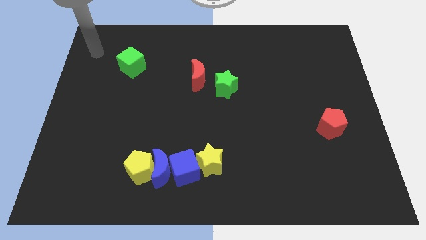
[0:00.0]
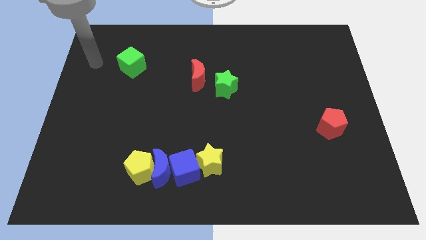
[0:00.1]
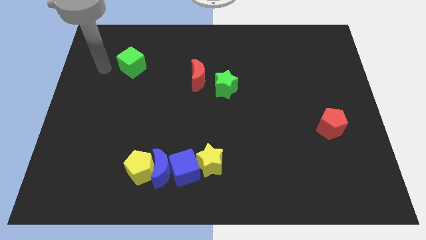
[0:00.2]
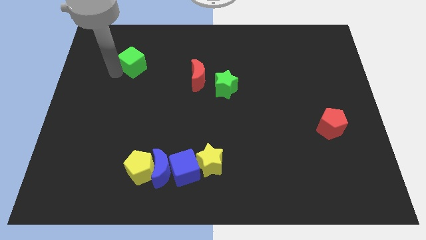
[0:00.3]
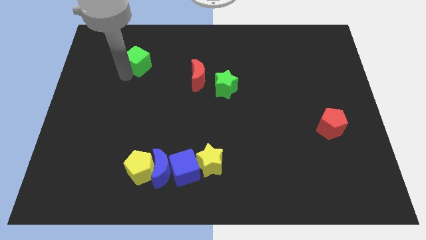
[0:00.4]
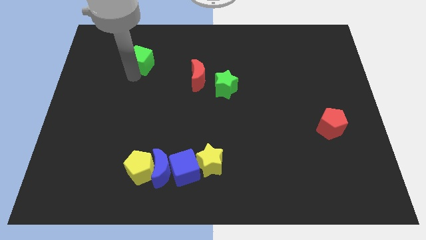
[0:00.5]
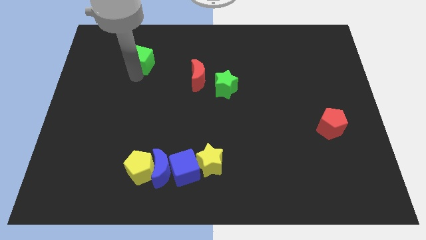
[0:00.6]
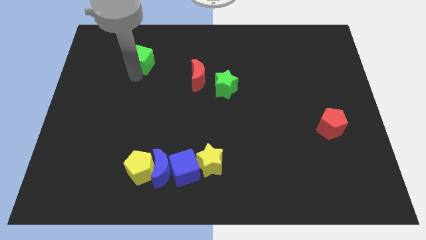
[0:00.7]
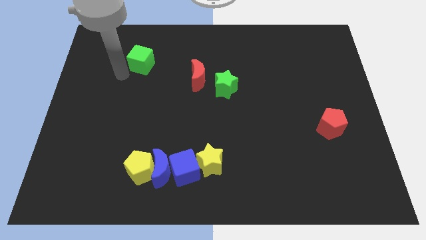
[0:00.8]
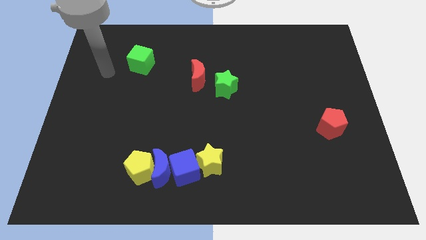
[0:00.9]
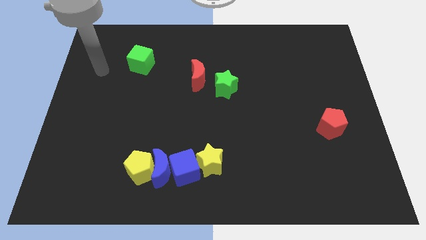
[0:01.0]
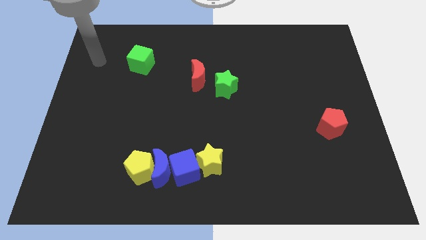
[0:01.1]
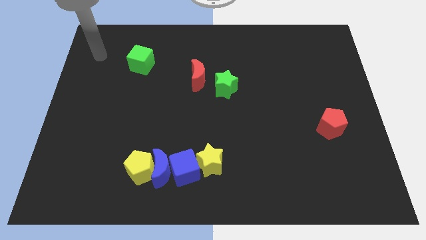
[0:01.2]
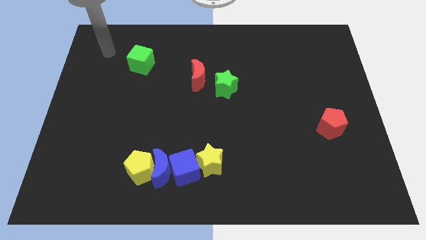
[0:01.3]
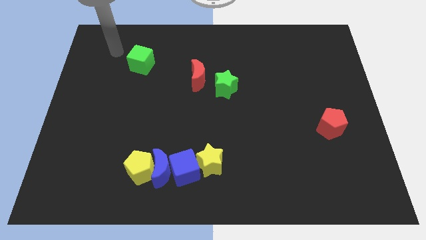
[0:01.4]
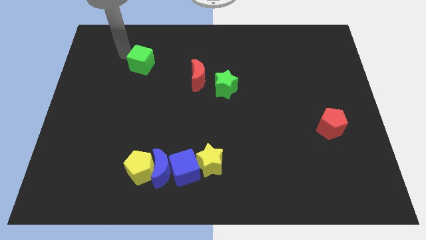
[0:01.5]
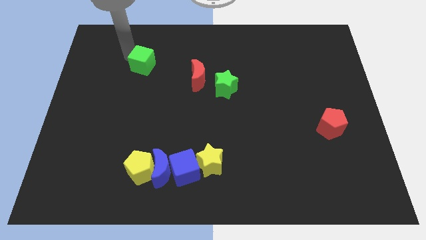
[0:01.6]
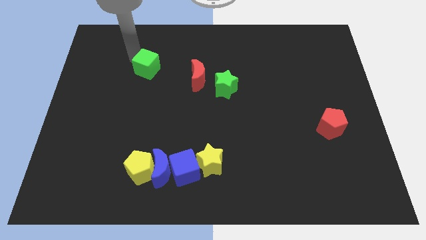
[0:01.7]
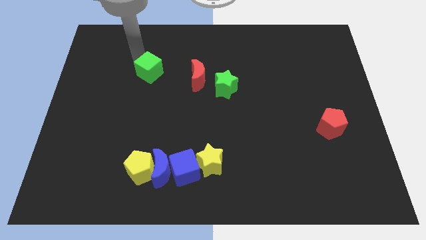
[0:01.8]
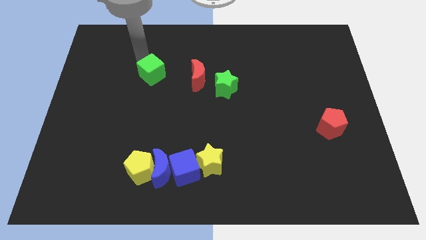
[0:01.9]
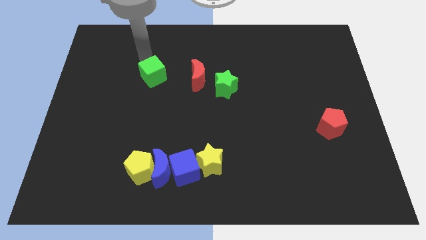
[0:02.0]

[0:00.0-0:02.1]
put the green cube vertically above the yellow pentagon

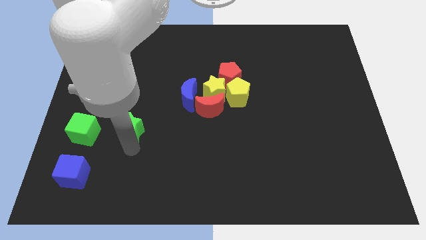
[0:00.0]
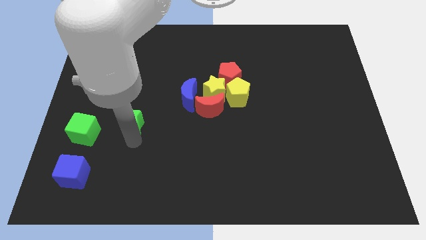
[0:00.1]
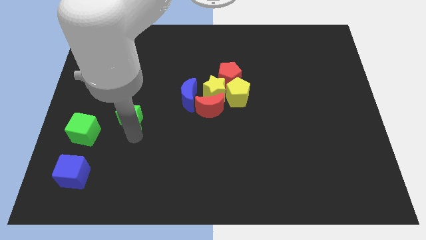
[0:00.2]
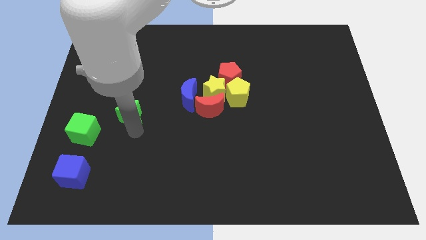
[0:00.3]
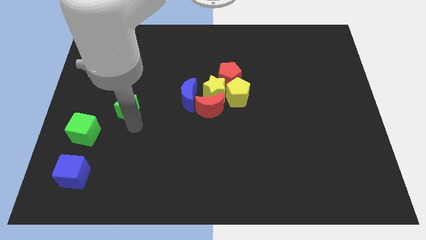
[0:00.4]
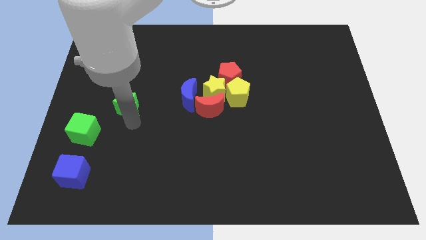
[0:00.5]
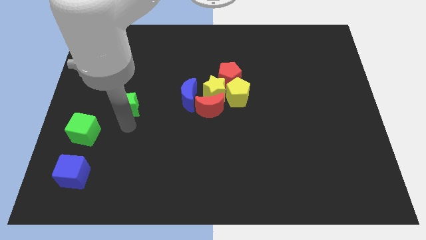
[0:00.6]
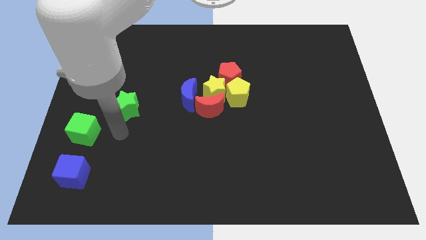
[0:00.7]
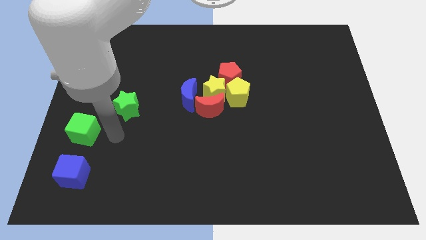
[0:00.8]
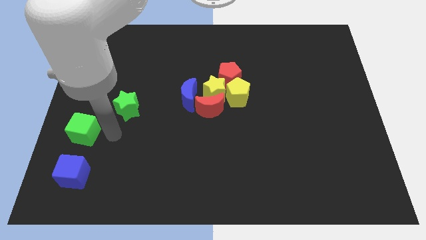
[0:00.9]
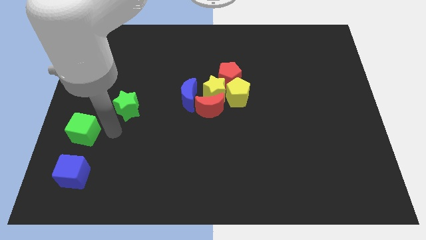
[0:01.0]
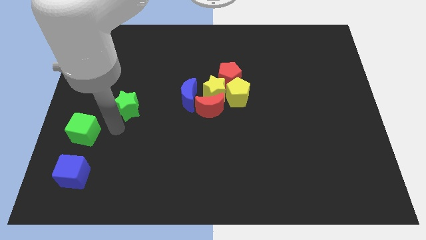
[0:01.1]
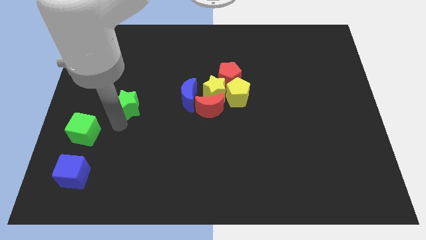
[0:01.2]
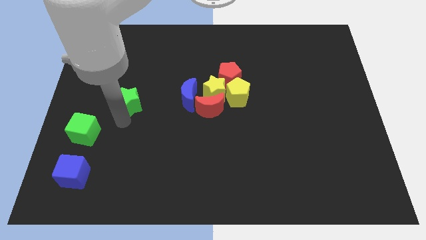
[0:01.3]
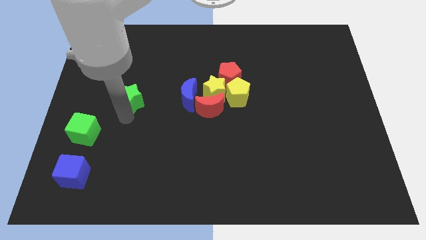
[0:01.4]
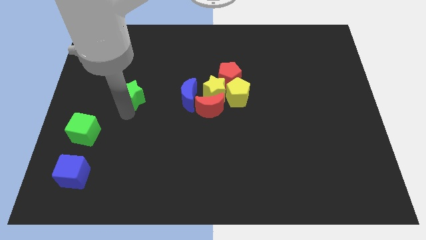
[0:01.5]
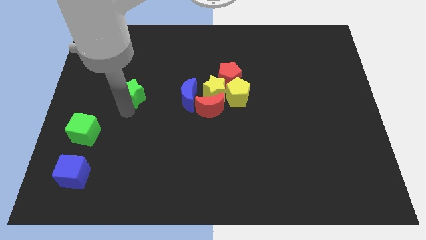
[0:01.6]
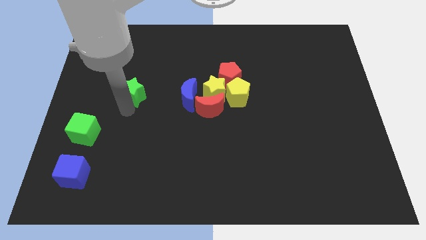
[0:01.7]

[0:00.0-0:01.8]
push the green star to the left of the blue crescent

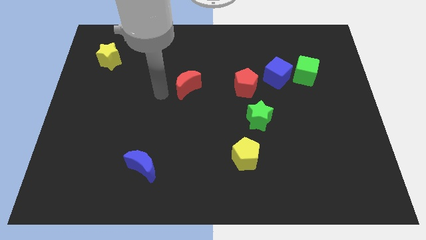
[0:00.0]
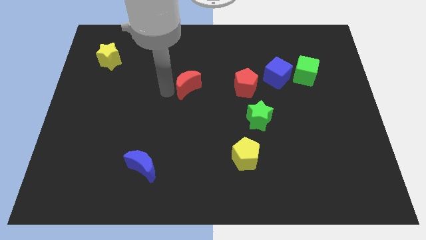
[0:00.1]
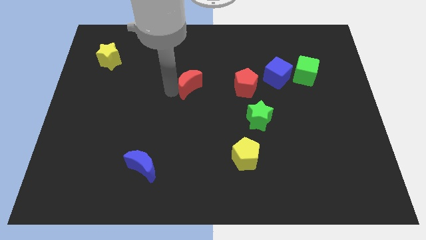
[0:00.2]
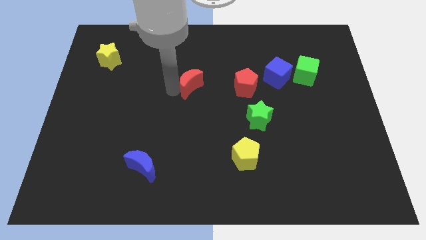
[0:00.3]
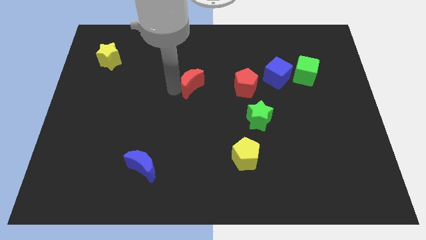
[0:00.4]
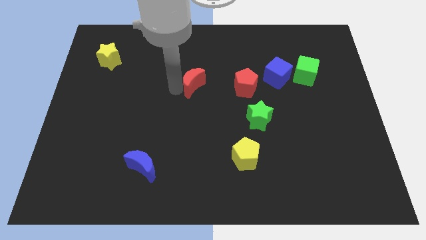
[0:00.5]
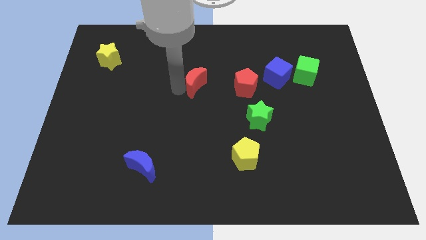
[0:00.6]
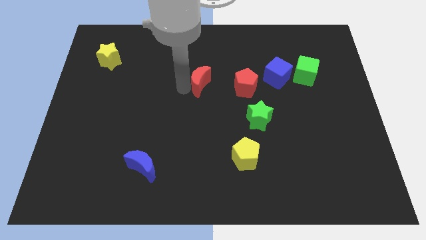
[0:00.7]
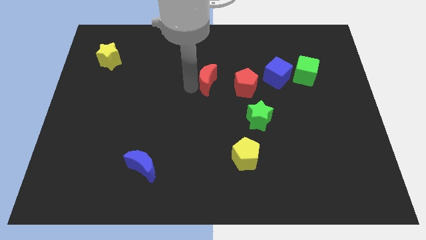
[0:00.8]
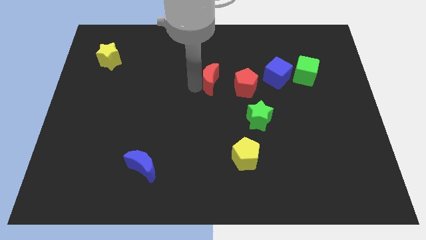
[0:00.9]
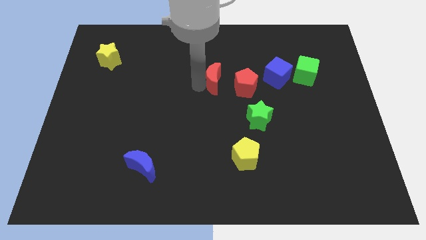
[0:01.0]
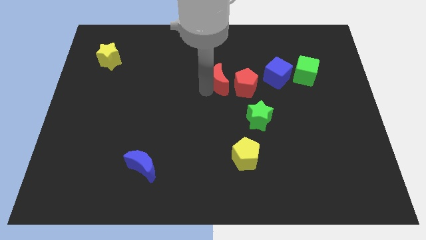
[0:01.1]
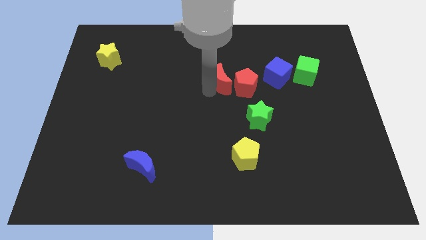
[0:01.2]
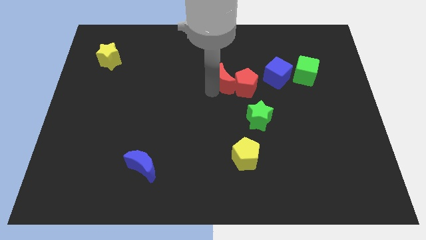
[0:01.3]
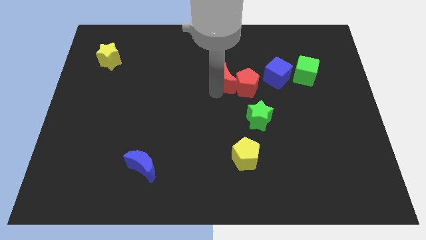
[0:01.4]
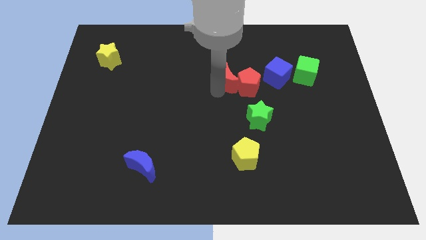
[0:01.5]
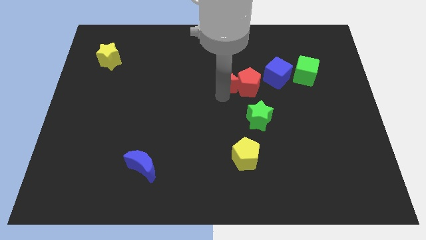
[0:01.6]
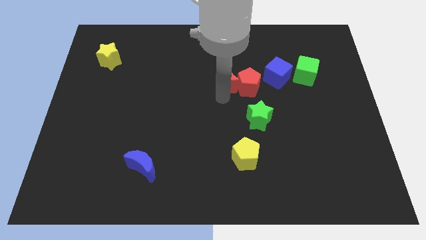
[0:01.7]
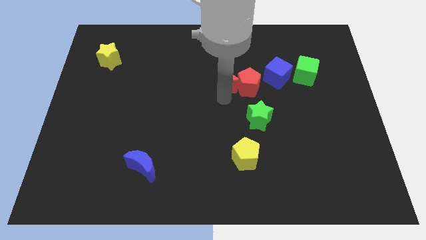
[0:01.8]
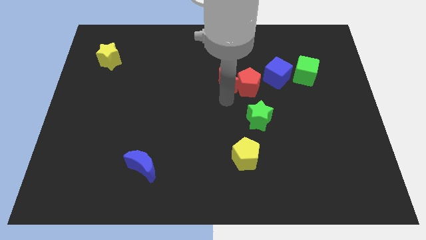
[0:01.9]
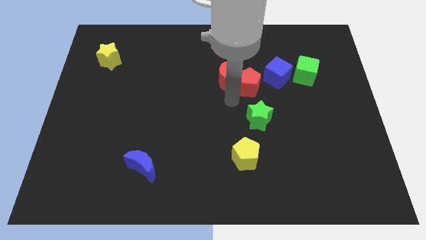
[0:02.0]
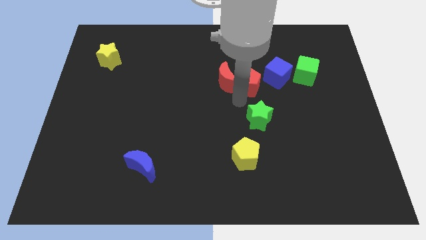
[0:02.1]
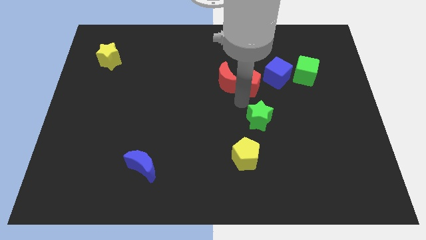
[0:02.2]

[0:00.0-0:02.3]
push the red crescent into red pentagon

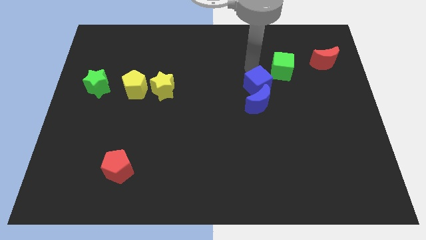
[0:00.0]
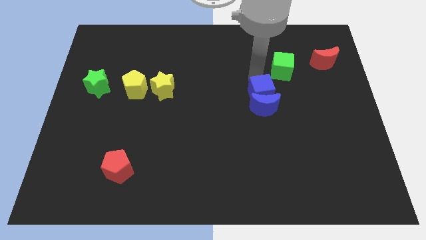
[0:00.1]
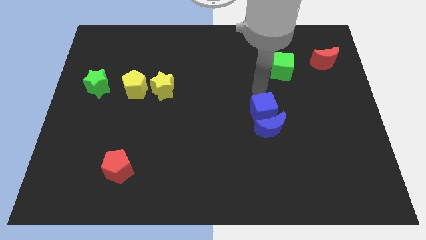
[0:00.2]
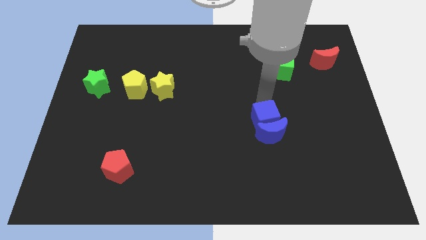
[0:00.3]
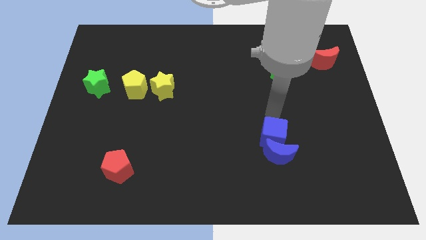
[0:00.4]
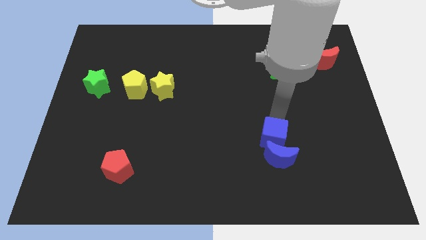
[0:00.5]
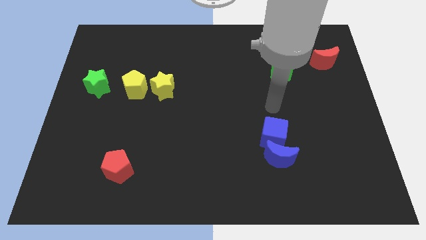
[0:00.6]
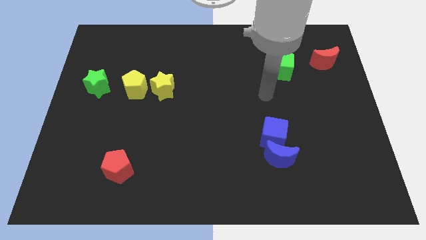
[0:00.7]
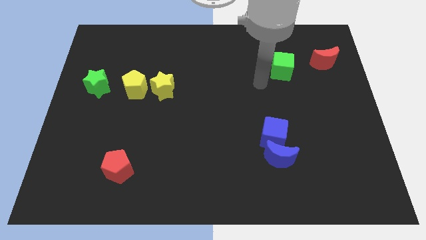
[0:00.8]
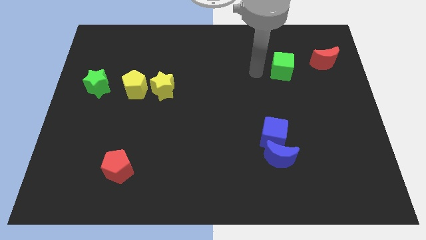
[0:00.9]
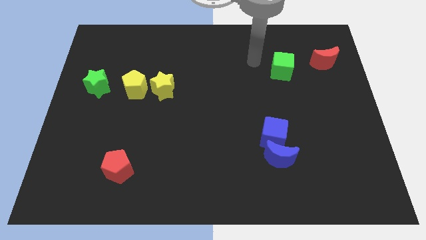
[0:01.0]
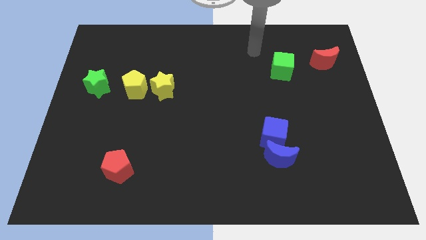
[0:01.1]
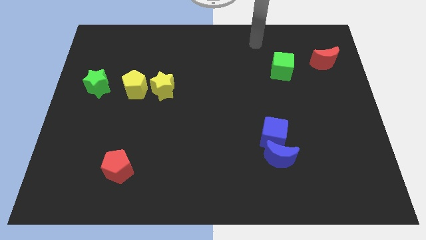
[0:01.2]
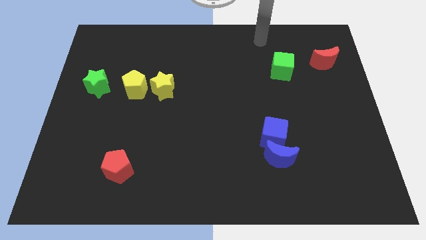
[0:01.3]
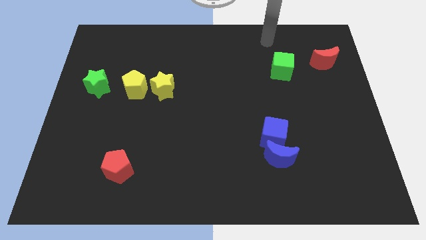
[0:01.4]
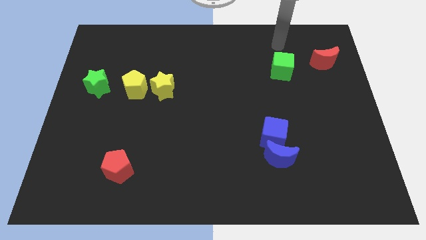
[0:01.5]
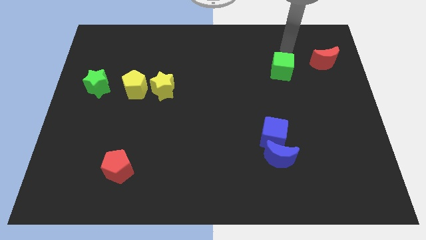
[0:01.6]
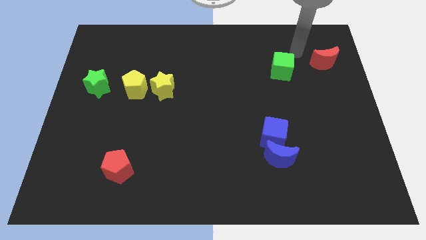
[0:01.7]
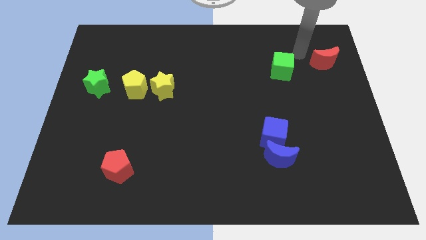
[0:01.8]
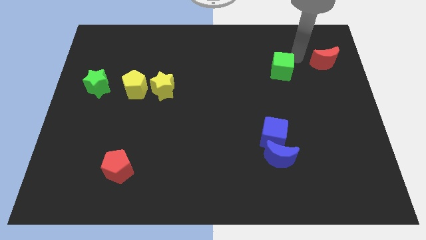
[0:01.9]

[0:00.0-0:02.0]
push the blue moon and blue cube towards the bottom of the board

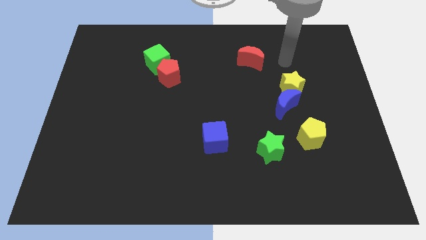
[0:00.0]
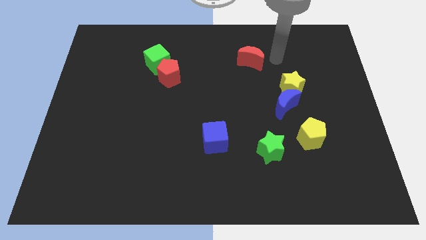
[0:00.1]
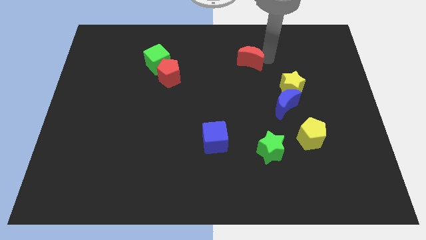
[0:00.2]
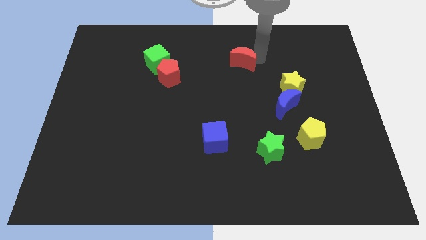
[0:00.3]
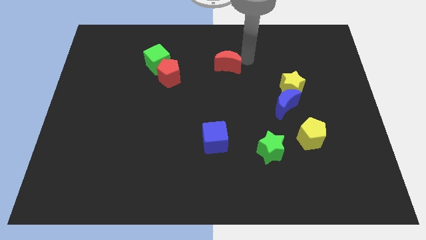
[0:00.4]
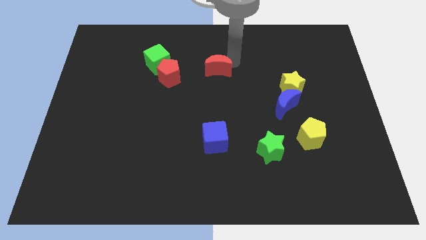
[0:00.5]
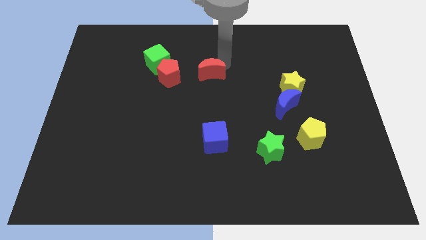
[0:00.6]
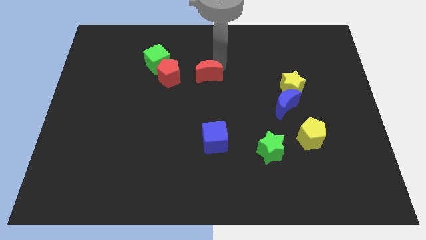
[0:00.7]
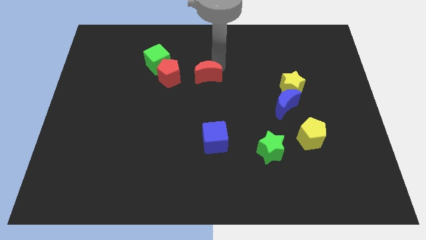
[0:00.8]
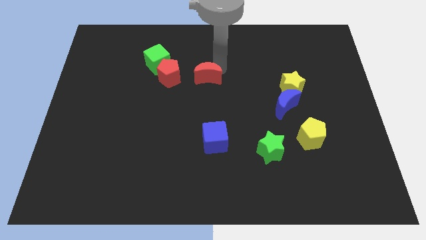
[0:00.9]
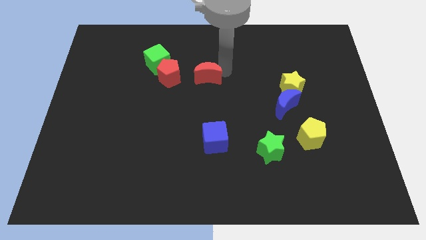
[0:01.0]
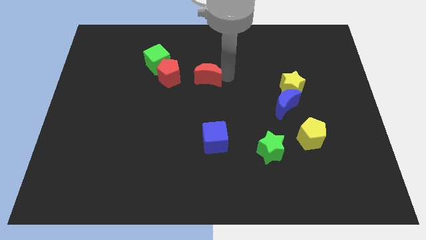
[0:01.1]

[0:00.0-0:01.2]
place the red moon right to the red pentagon
